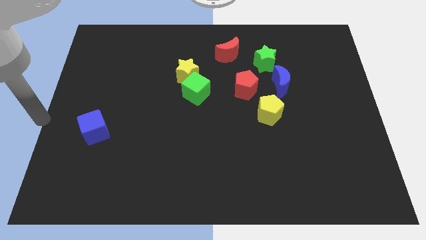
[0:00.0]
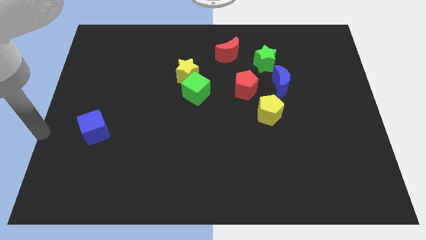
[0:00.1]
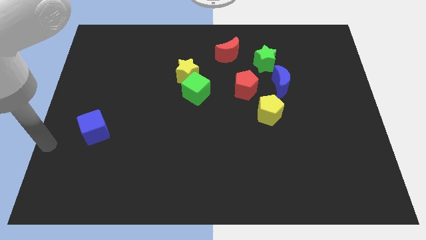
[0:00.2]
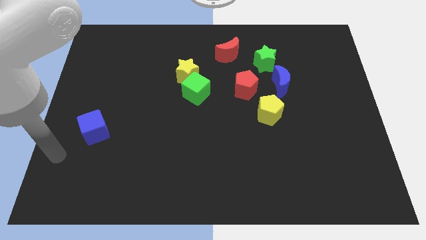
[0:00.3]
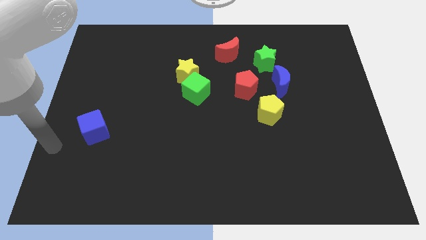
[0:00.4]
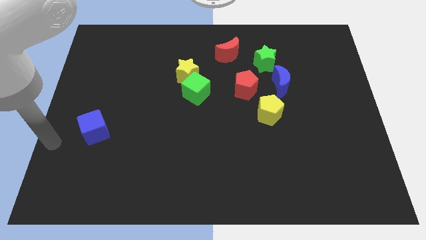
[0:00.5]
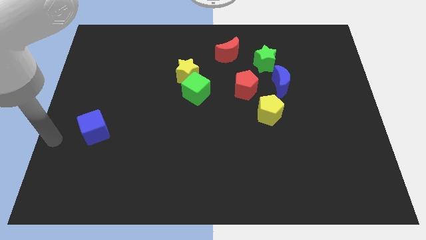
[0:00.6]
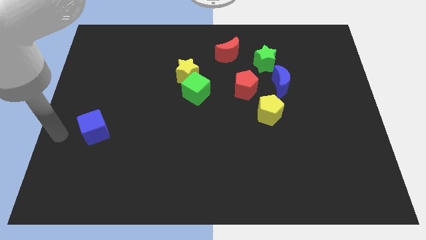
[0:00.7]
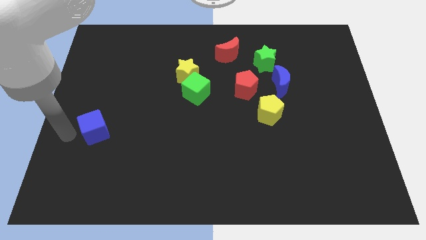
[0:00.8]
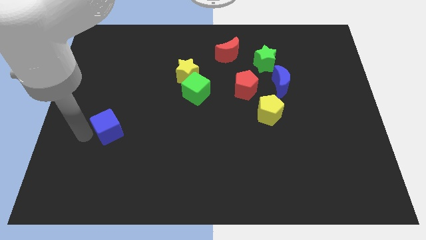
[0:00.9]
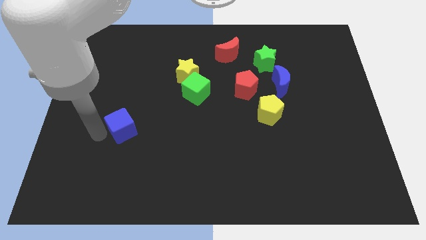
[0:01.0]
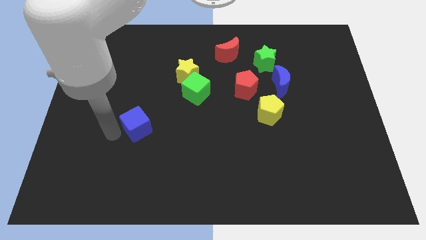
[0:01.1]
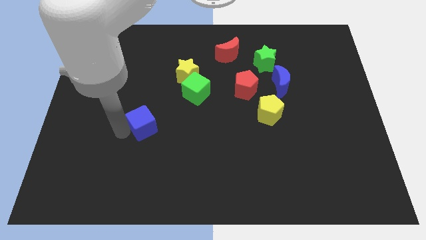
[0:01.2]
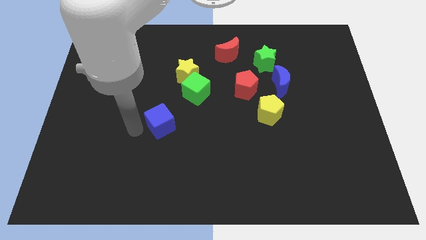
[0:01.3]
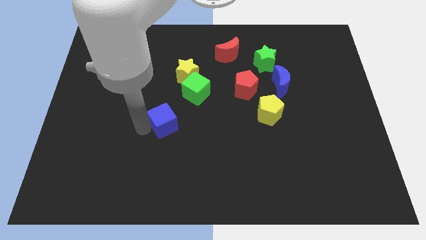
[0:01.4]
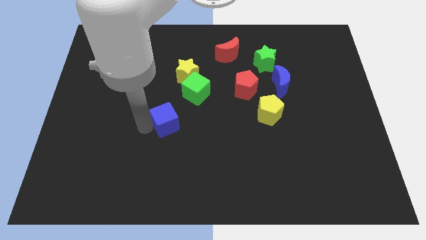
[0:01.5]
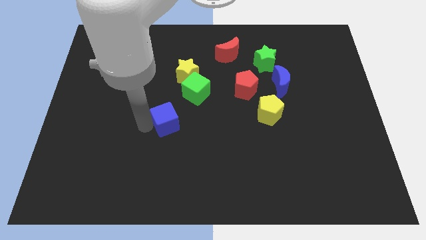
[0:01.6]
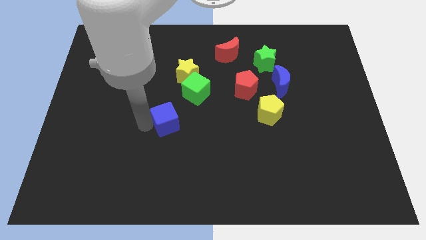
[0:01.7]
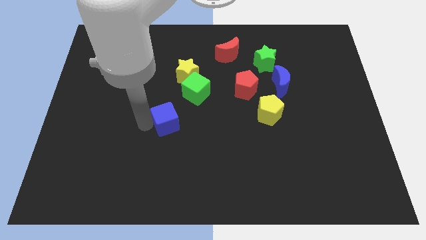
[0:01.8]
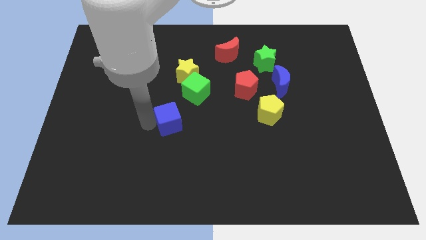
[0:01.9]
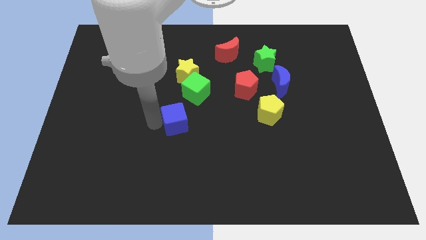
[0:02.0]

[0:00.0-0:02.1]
push the blue cube towards the green cube

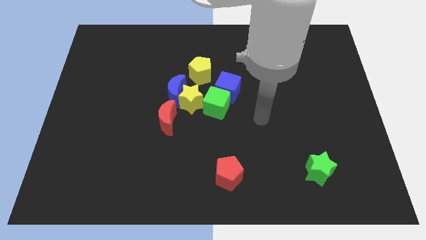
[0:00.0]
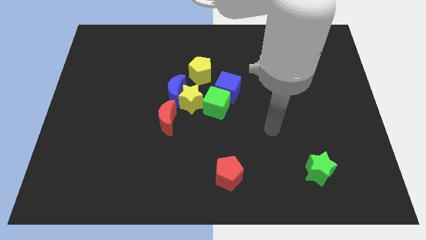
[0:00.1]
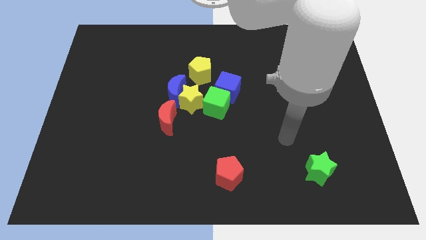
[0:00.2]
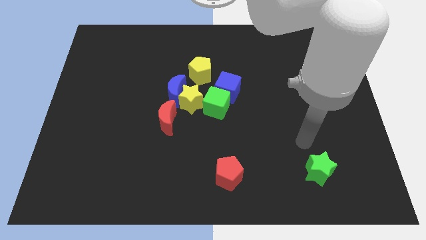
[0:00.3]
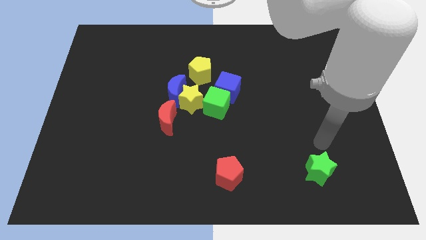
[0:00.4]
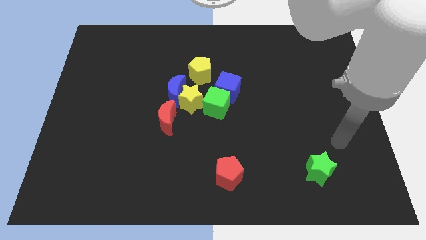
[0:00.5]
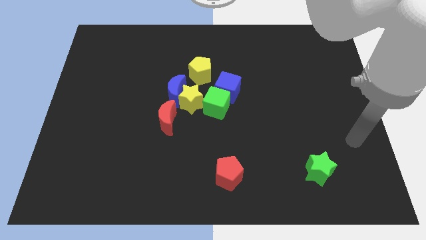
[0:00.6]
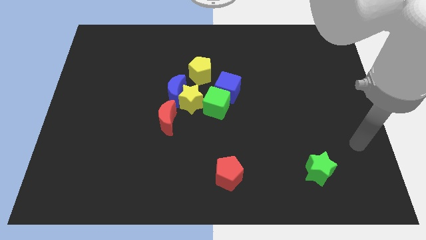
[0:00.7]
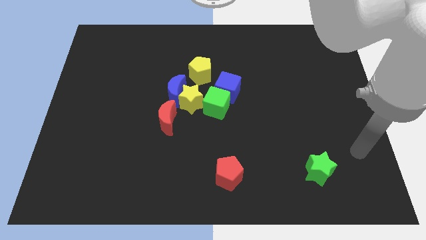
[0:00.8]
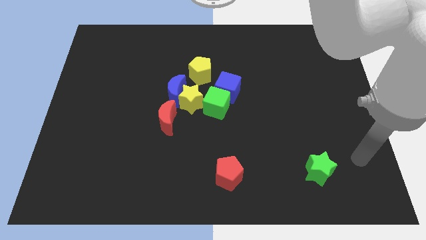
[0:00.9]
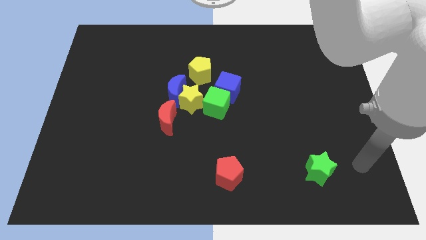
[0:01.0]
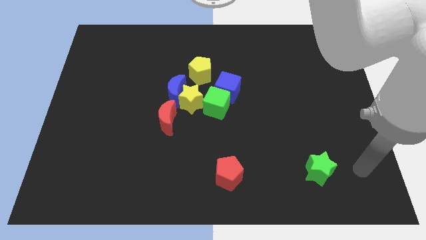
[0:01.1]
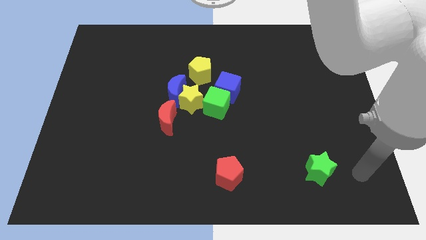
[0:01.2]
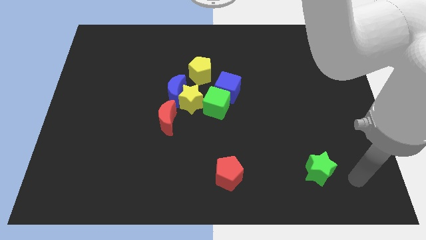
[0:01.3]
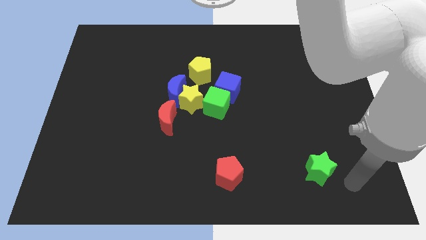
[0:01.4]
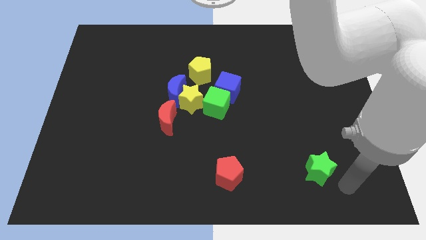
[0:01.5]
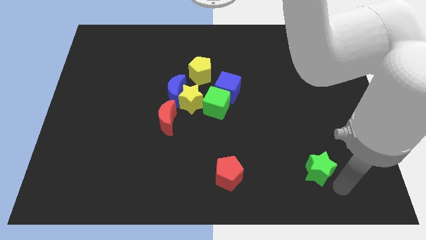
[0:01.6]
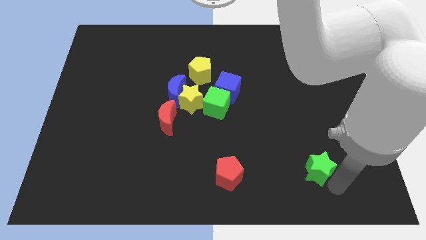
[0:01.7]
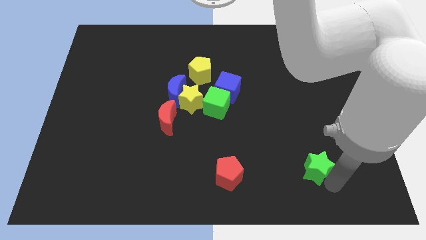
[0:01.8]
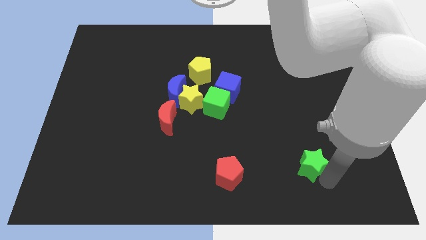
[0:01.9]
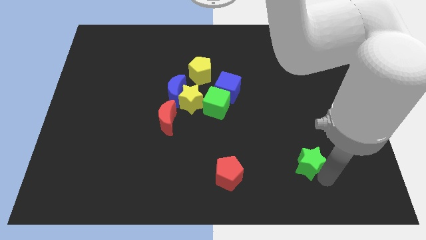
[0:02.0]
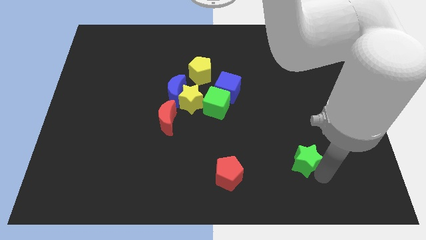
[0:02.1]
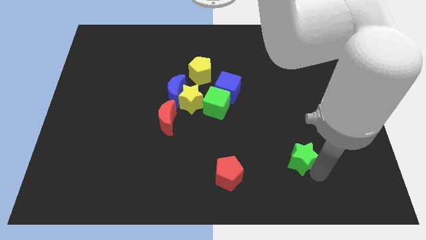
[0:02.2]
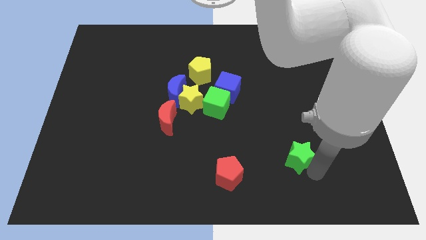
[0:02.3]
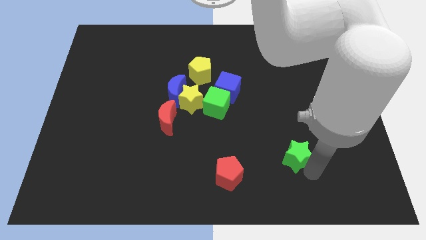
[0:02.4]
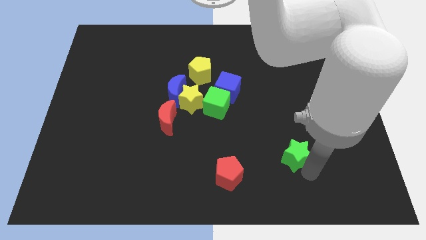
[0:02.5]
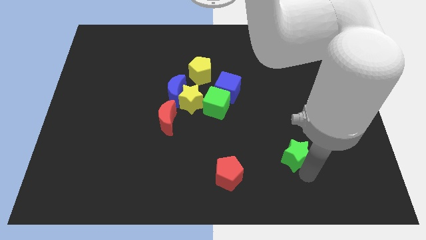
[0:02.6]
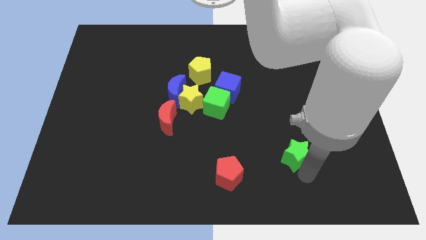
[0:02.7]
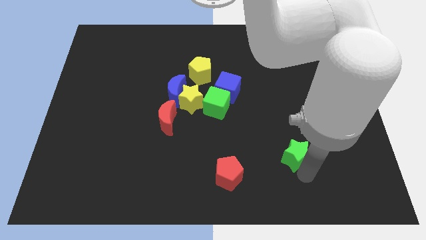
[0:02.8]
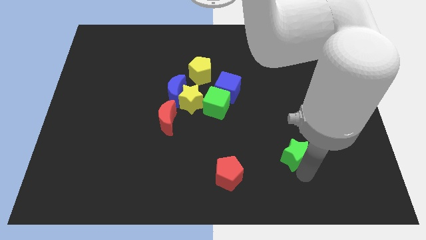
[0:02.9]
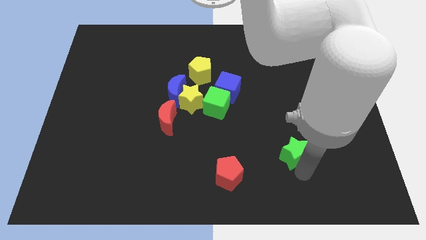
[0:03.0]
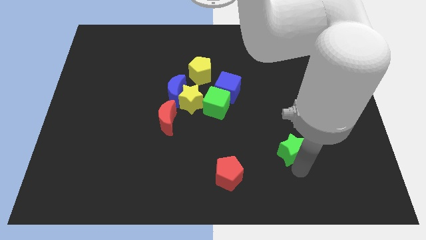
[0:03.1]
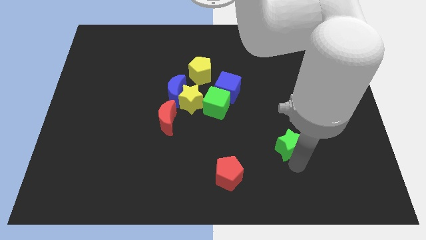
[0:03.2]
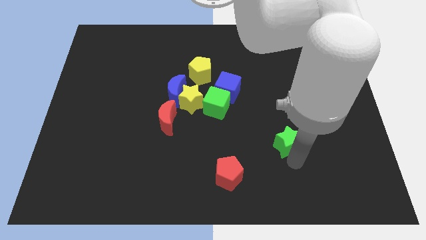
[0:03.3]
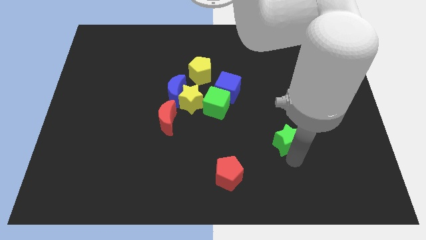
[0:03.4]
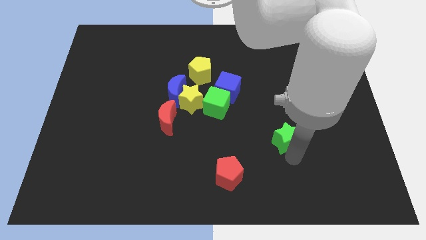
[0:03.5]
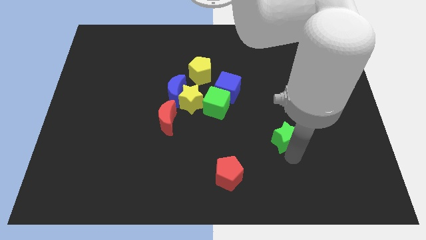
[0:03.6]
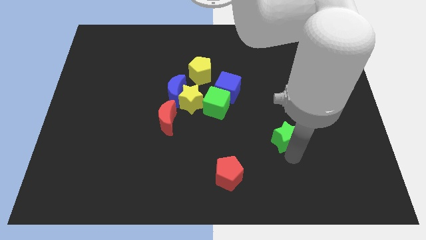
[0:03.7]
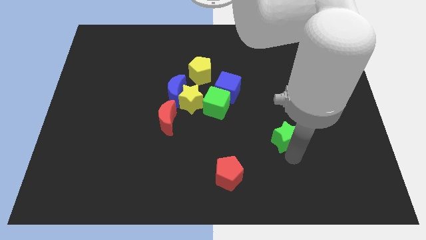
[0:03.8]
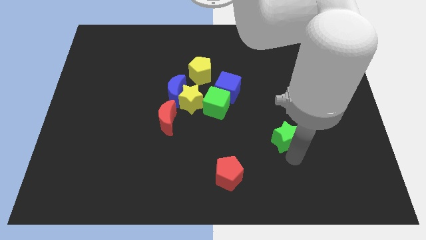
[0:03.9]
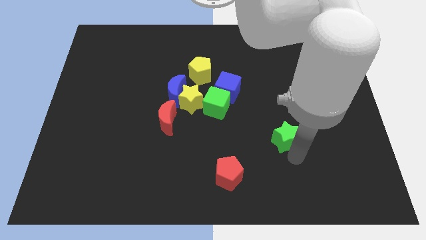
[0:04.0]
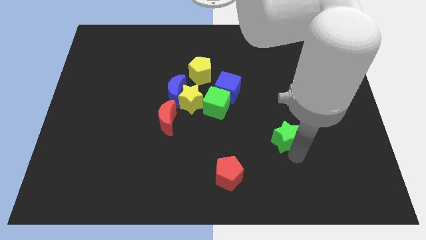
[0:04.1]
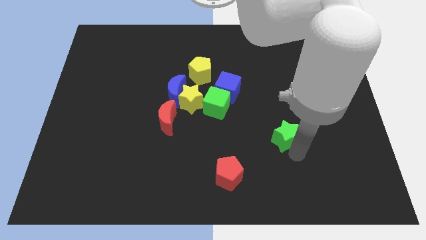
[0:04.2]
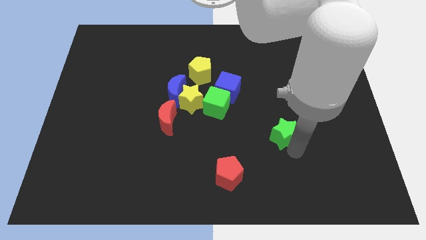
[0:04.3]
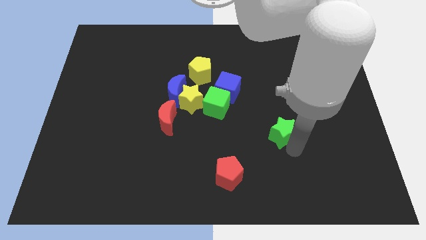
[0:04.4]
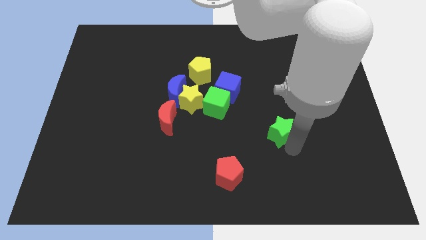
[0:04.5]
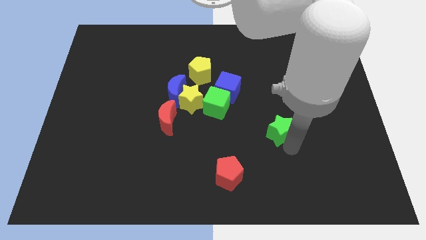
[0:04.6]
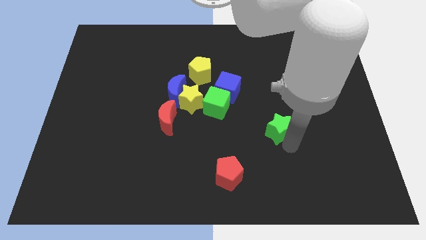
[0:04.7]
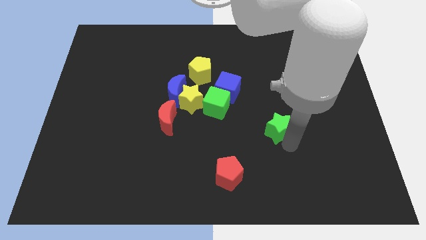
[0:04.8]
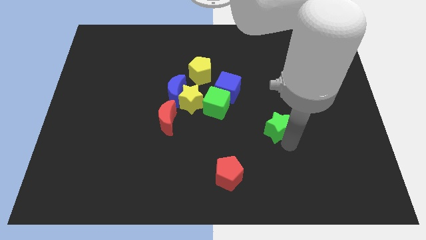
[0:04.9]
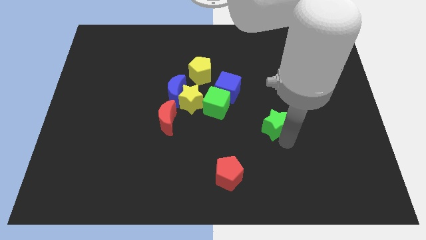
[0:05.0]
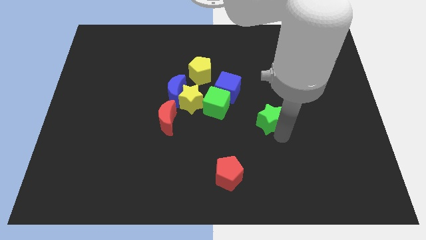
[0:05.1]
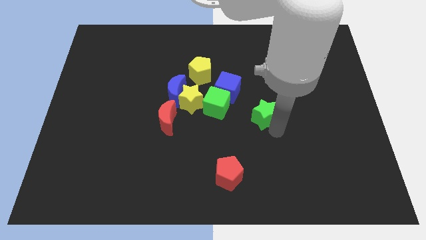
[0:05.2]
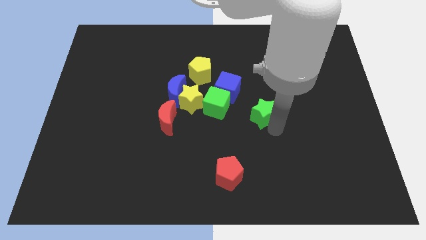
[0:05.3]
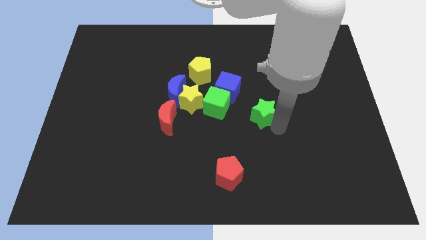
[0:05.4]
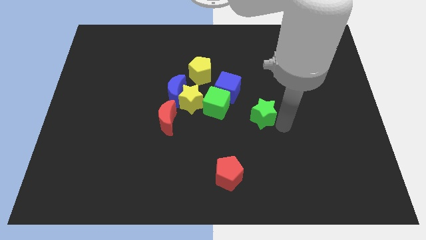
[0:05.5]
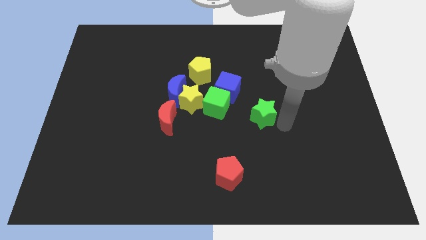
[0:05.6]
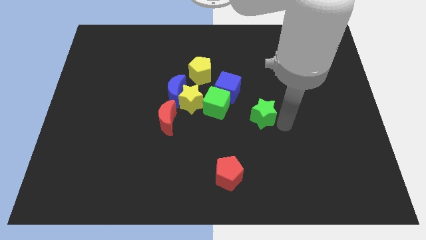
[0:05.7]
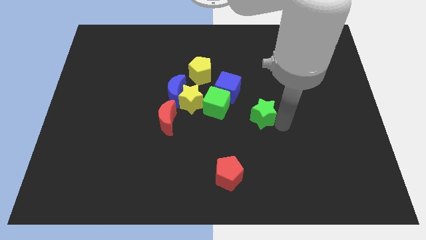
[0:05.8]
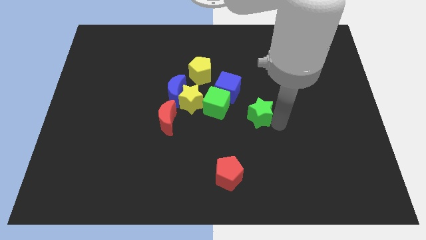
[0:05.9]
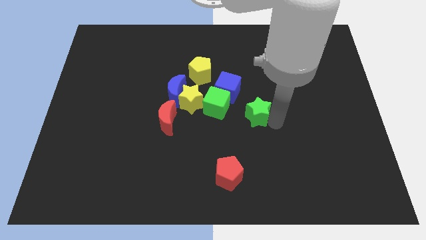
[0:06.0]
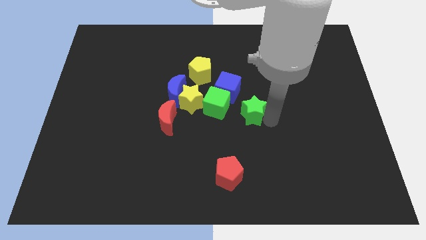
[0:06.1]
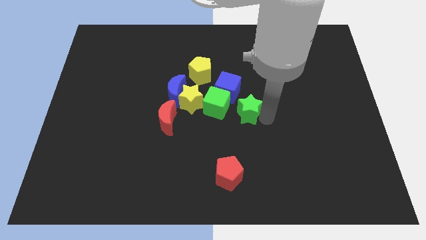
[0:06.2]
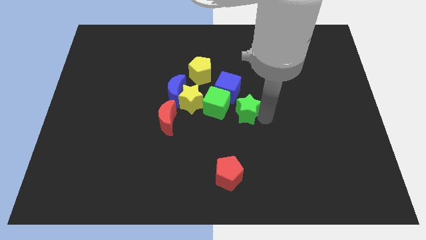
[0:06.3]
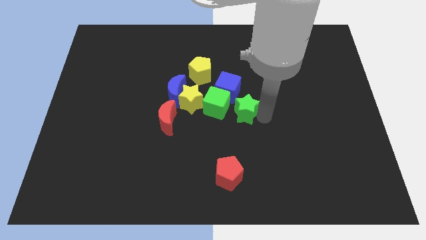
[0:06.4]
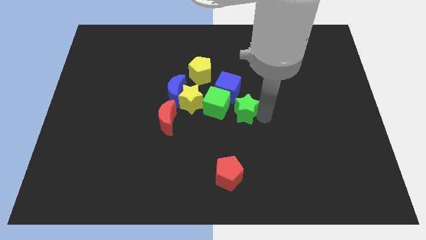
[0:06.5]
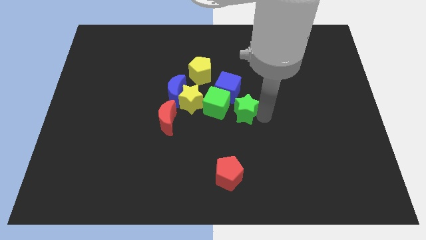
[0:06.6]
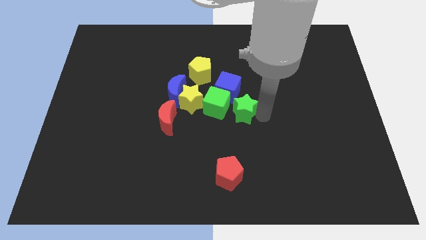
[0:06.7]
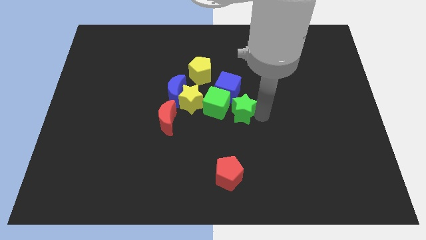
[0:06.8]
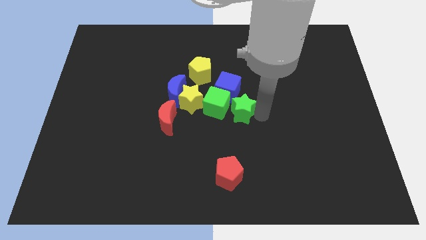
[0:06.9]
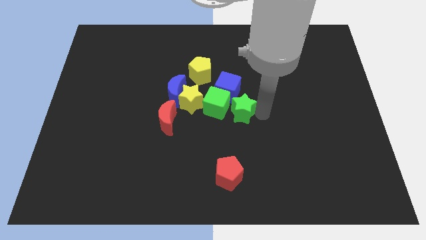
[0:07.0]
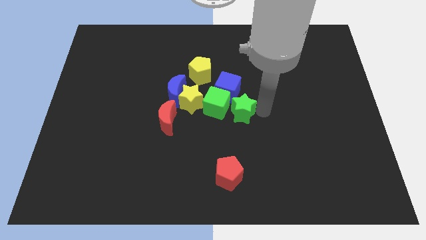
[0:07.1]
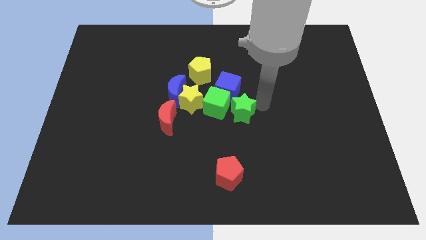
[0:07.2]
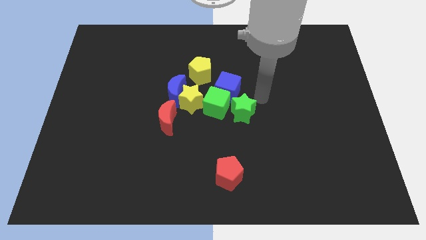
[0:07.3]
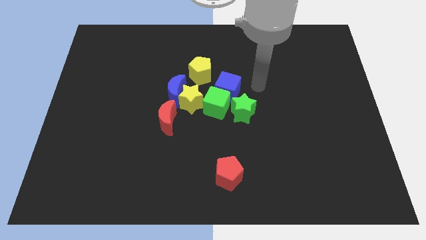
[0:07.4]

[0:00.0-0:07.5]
place the green star to the right of the green cube
